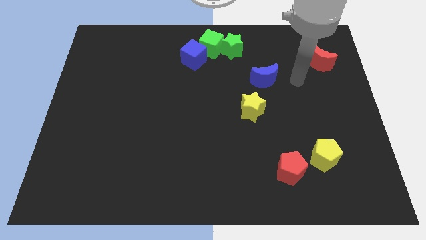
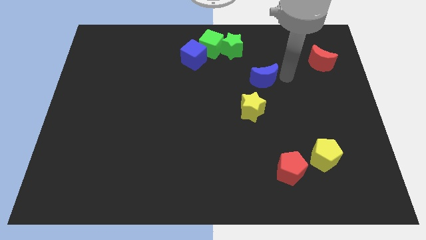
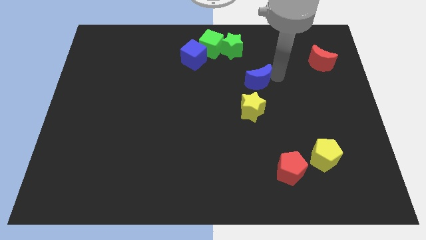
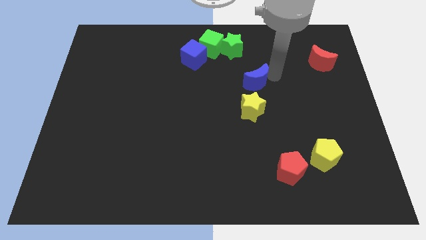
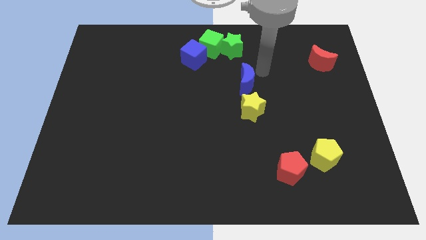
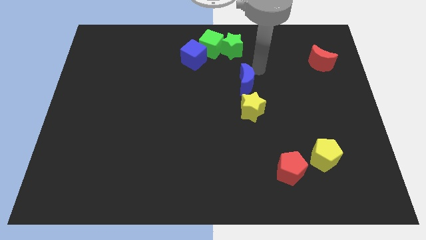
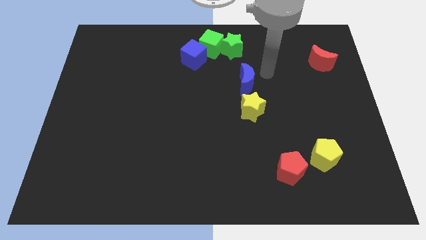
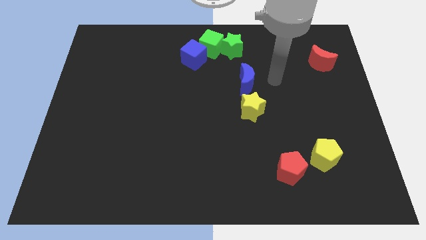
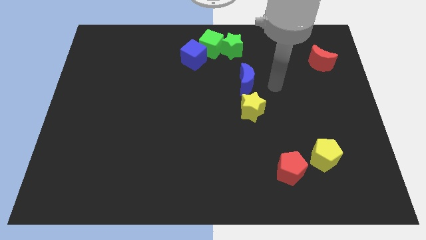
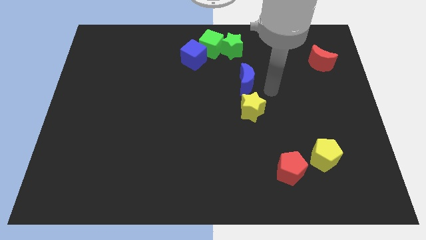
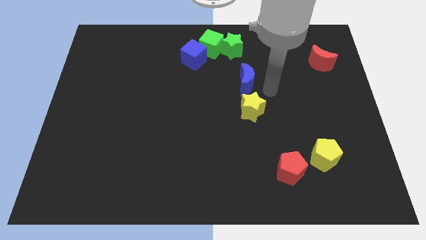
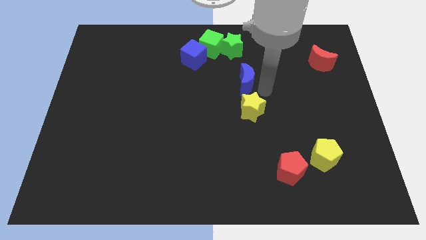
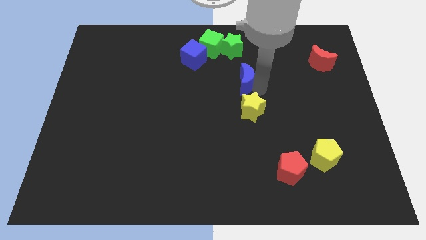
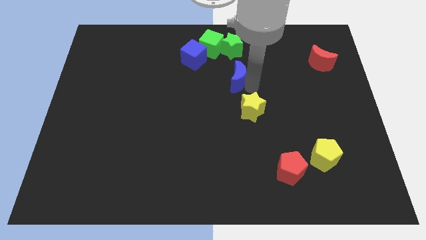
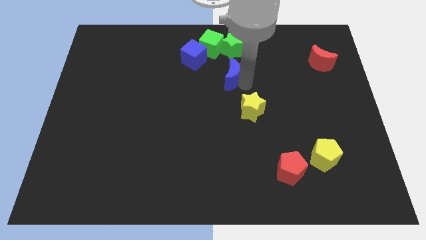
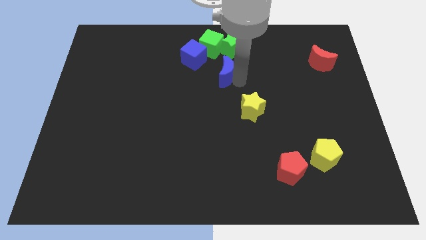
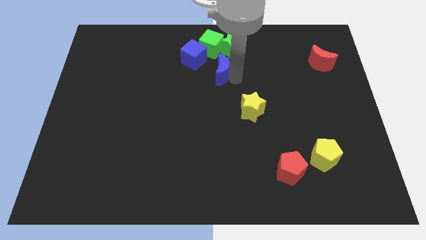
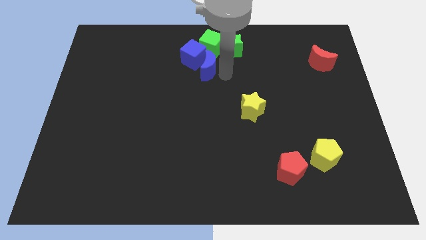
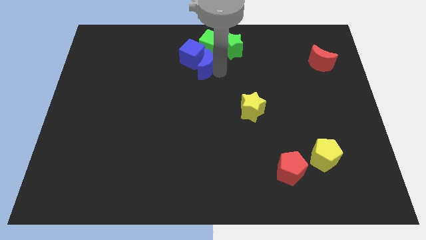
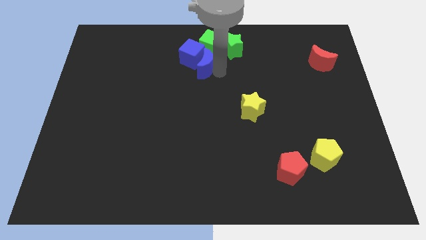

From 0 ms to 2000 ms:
place the blue crescent into the blue cube

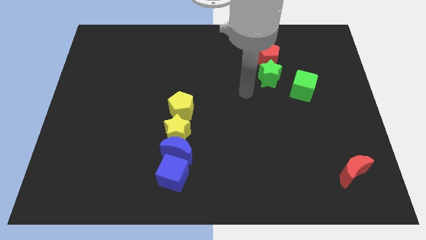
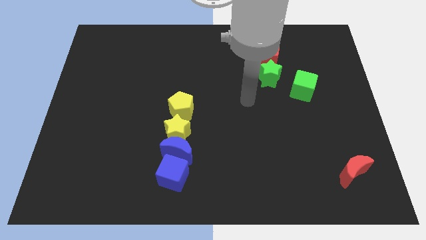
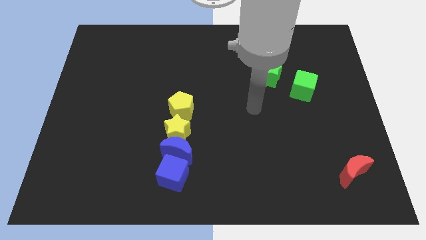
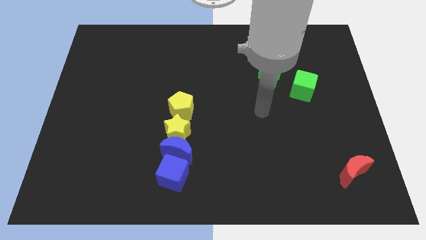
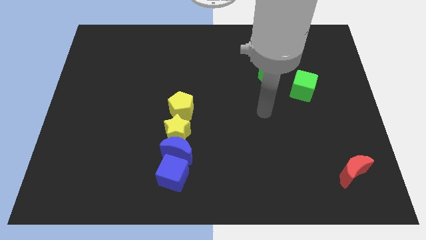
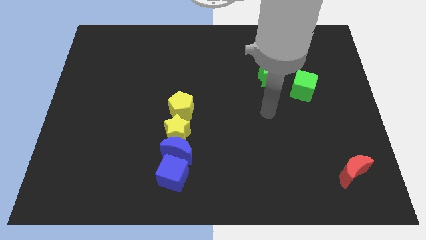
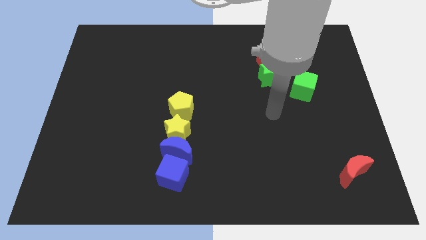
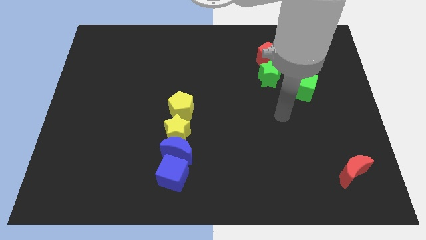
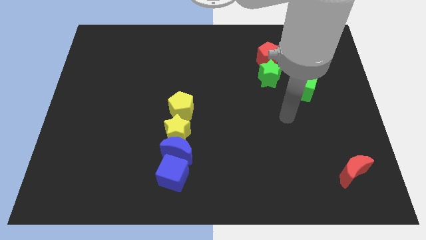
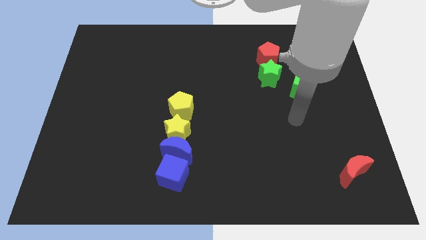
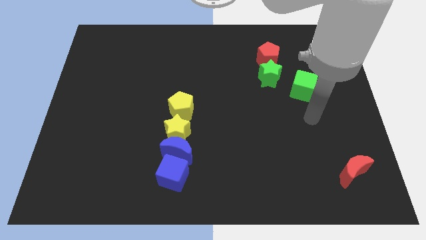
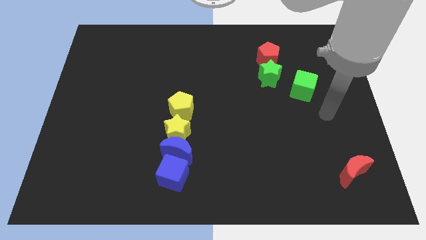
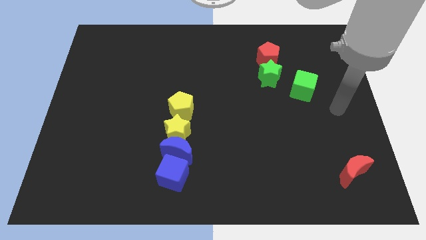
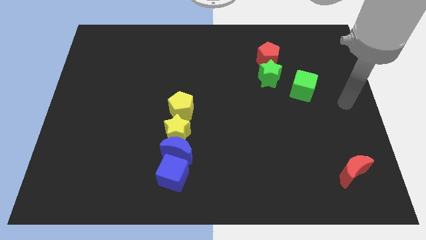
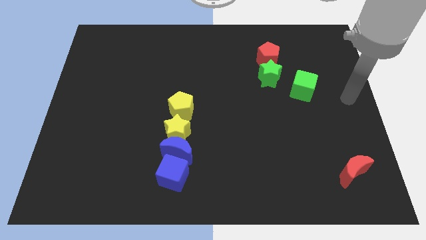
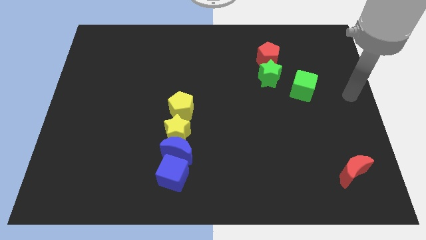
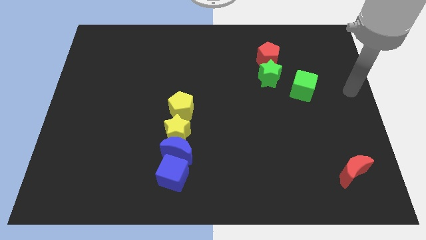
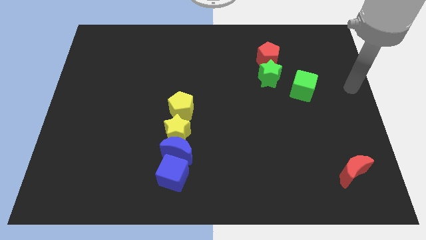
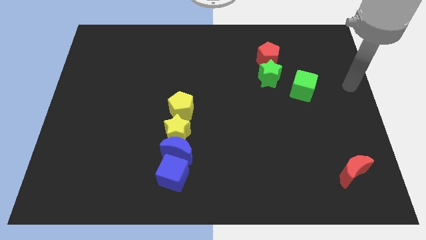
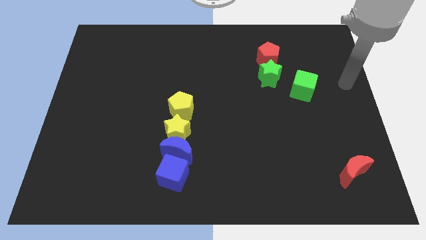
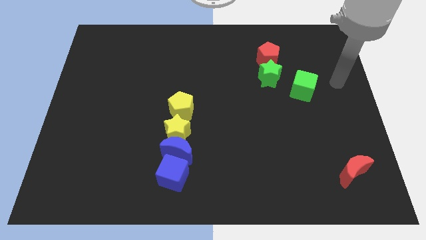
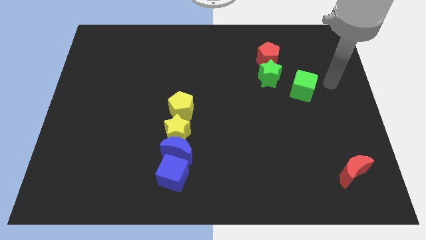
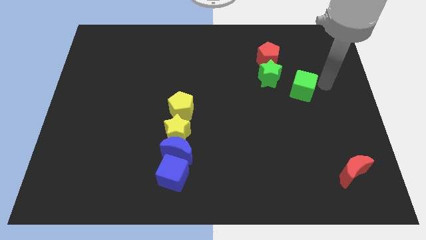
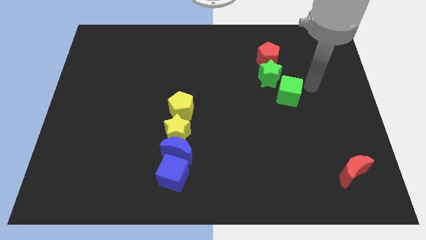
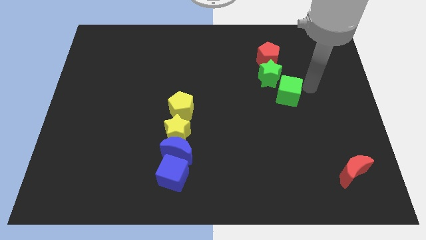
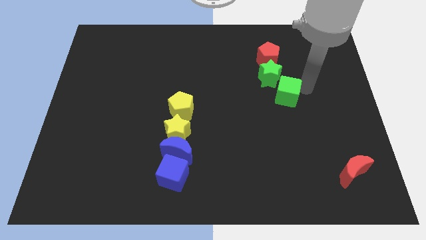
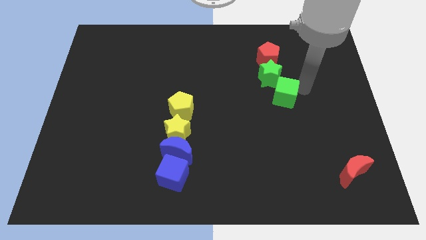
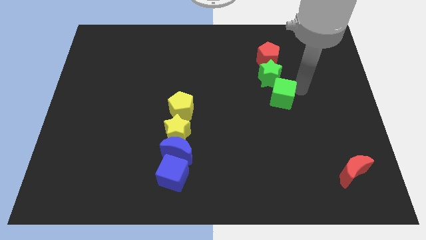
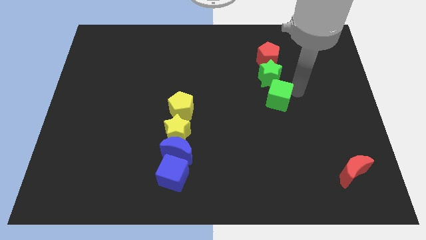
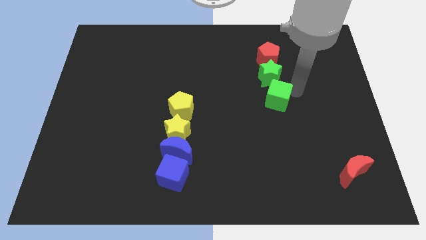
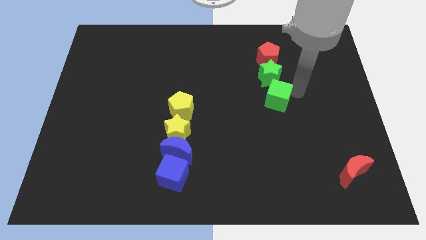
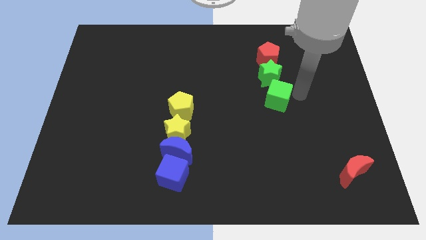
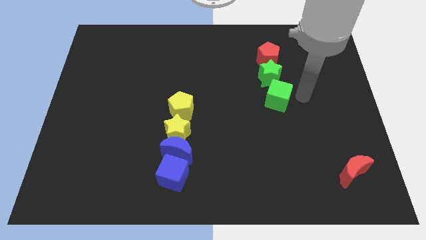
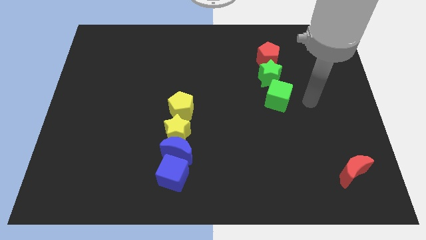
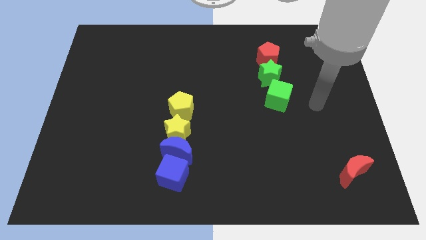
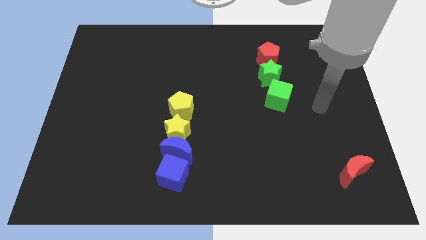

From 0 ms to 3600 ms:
push the green cube to the bottom of the green star

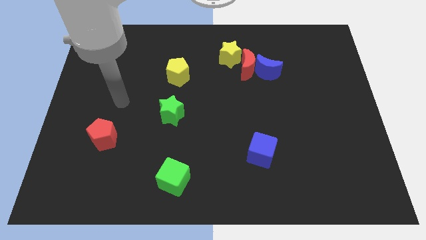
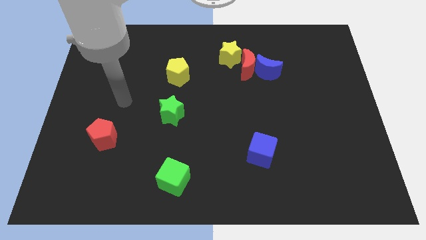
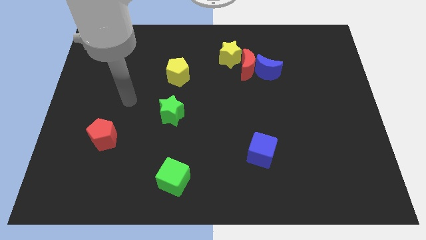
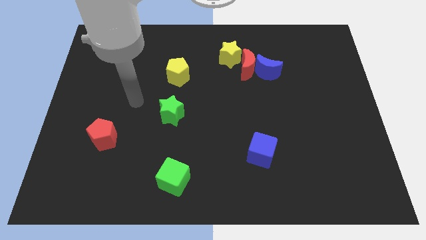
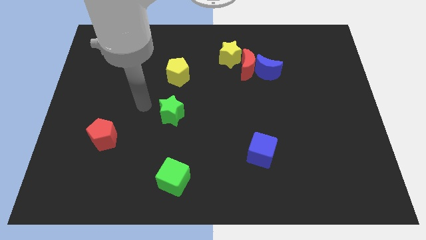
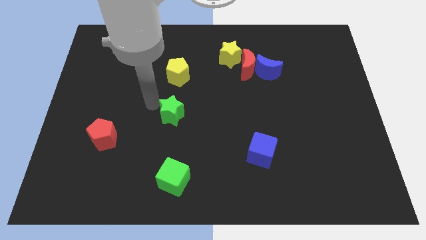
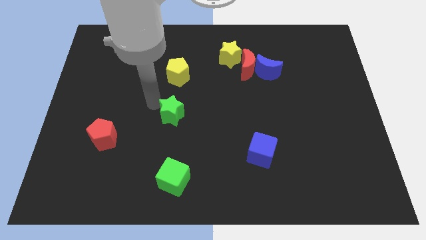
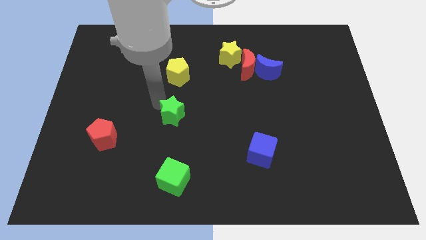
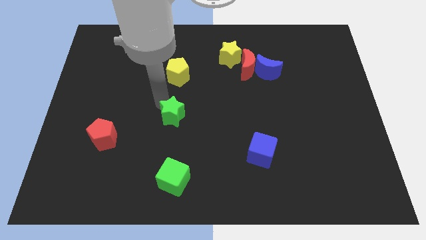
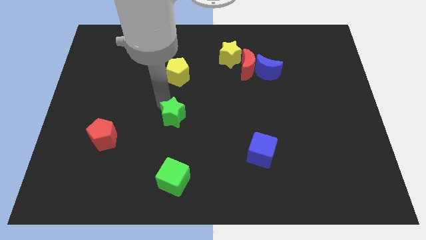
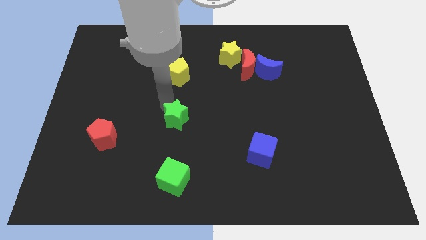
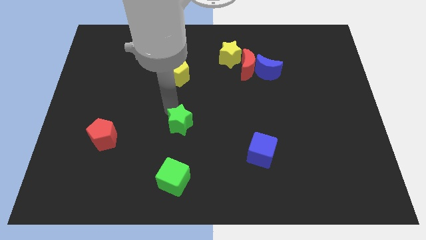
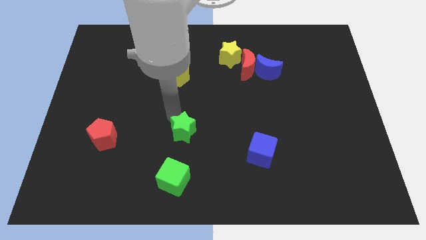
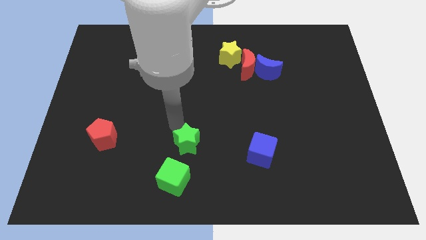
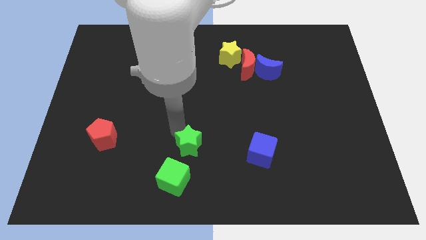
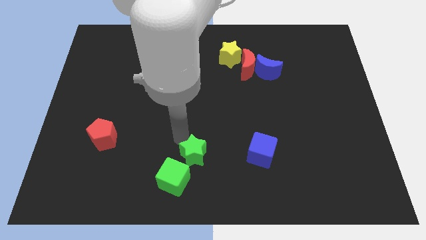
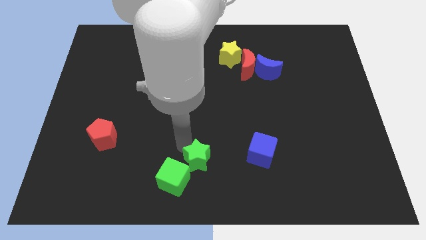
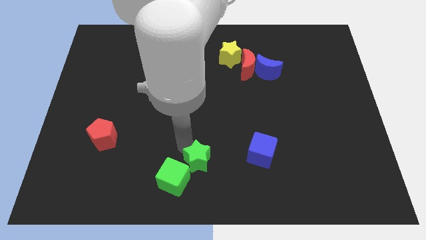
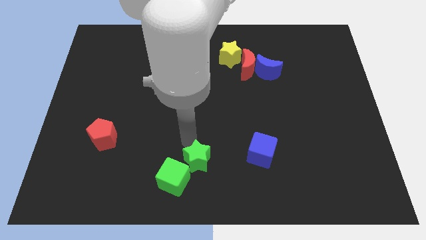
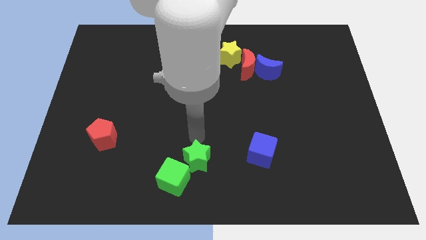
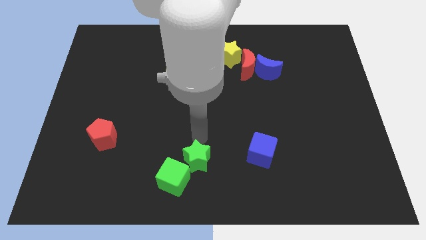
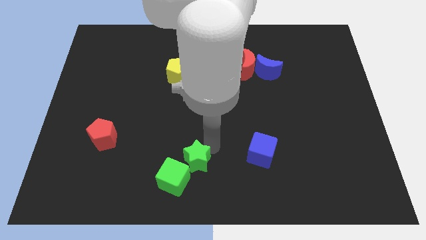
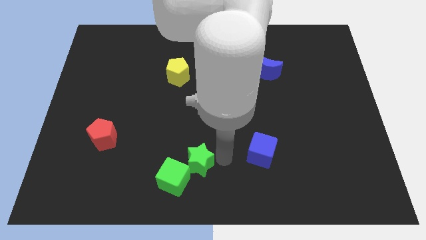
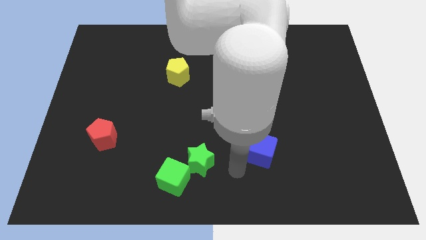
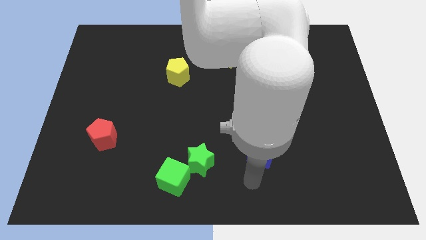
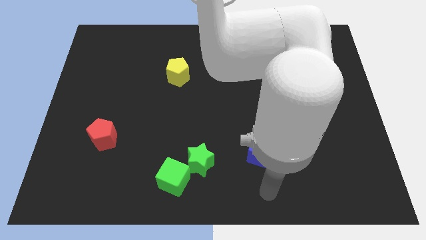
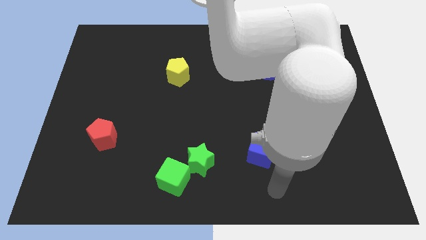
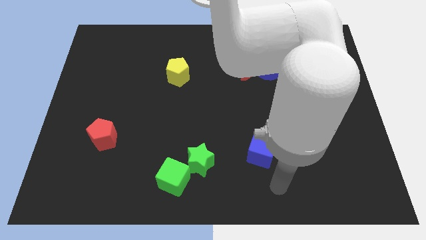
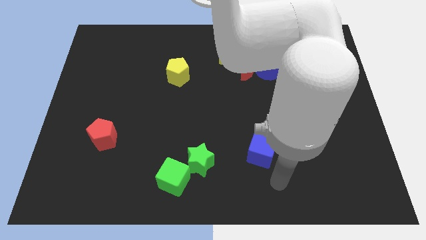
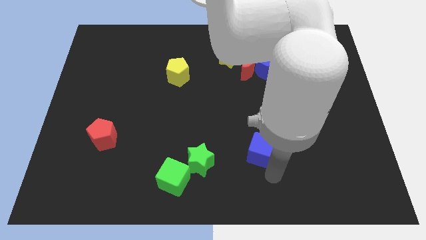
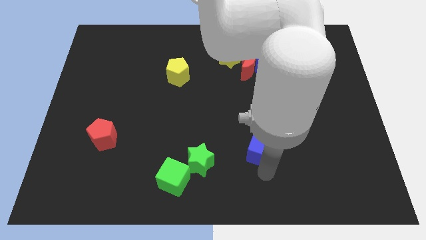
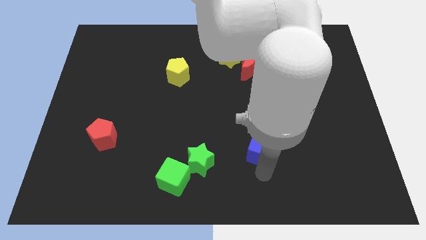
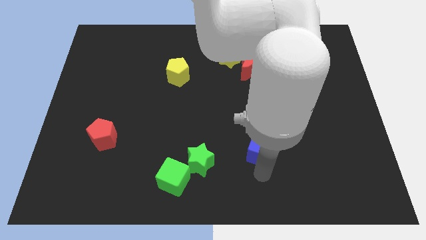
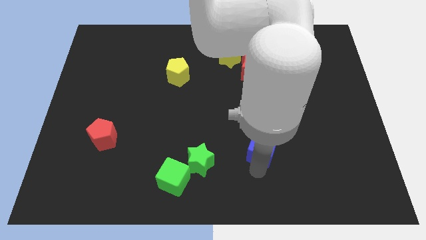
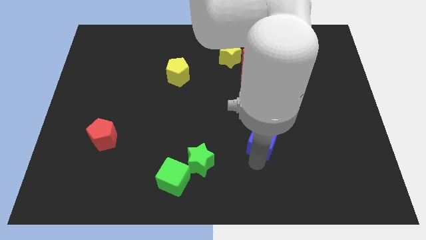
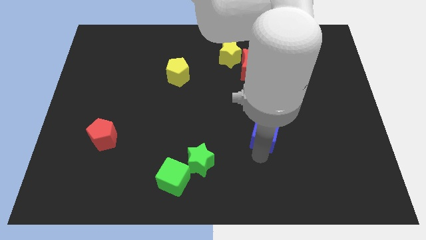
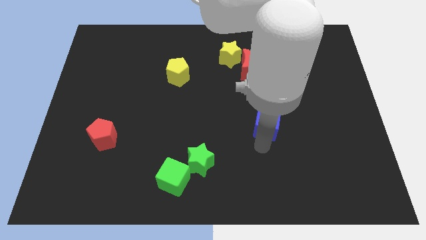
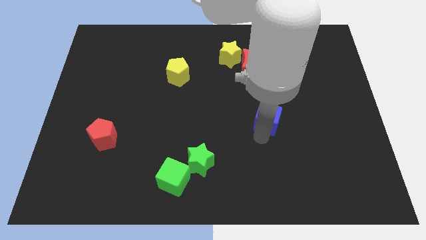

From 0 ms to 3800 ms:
move the green star and blue cube diagonally on the top right side of the green cube
